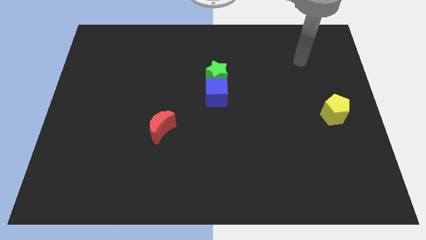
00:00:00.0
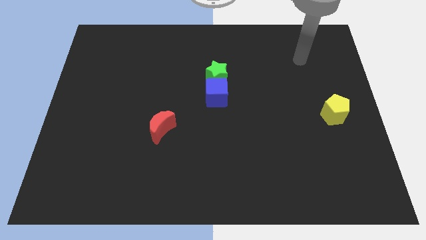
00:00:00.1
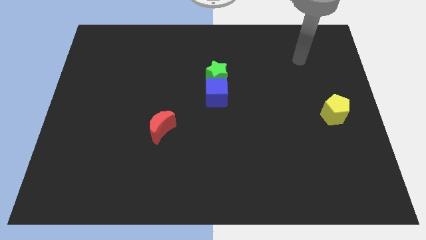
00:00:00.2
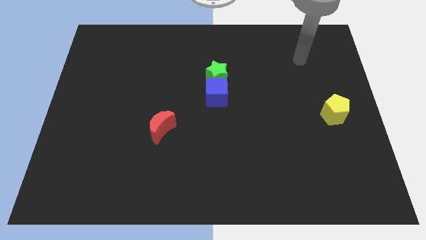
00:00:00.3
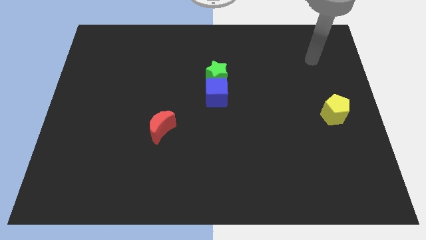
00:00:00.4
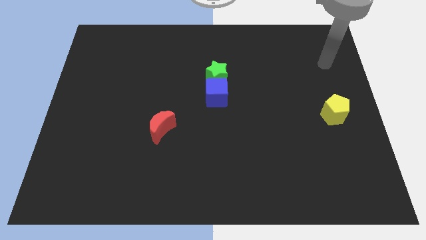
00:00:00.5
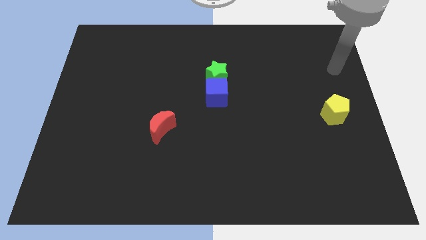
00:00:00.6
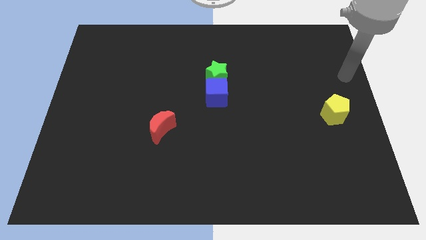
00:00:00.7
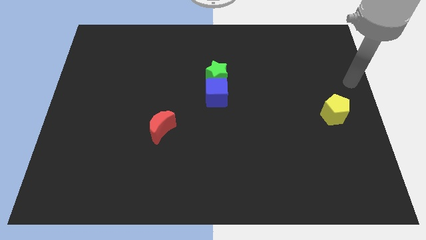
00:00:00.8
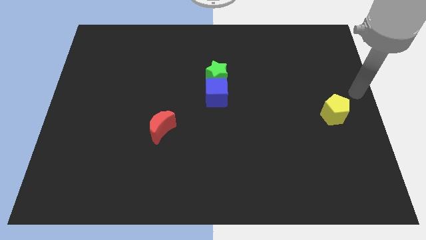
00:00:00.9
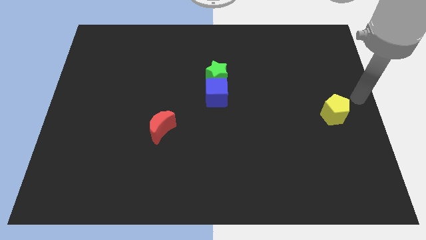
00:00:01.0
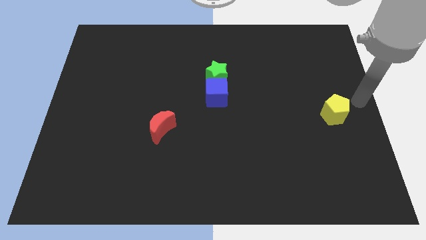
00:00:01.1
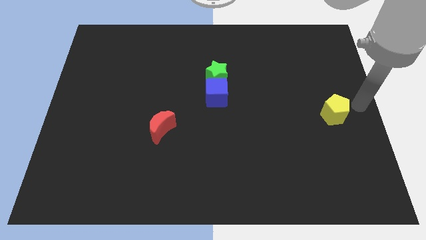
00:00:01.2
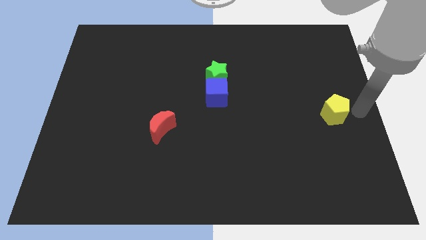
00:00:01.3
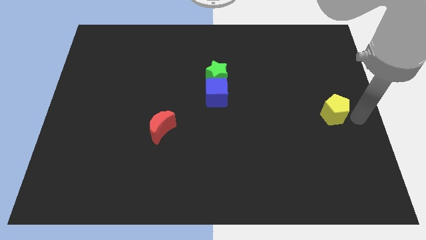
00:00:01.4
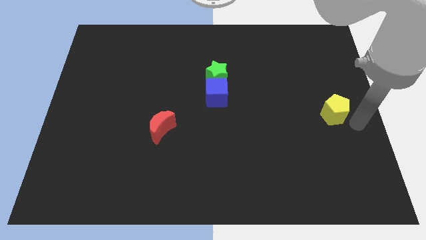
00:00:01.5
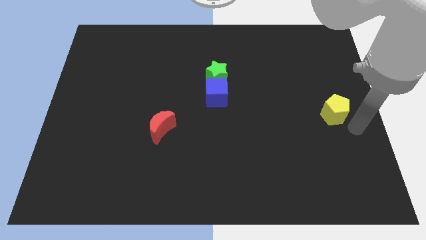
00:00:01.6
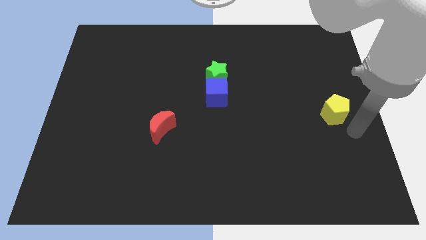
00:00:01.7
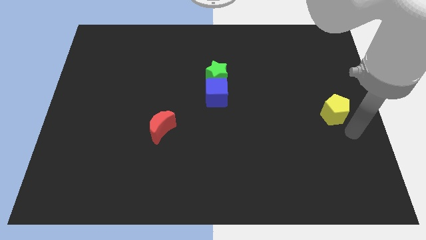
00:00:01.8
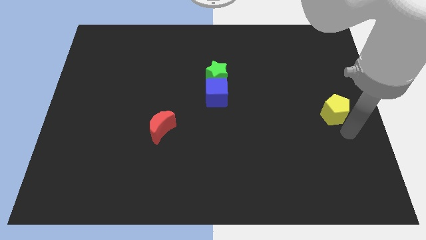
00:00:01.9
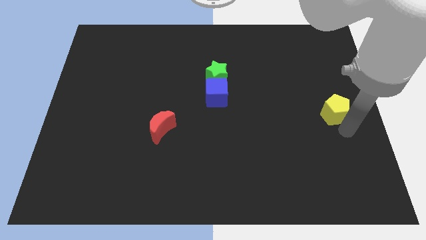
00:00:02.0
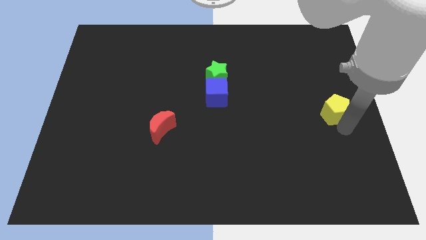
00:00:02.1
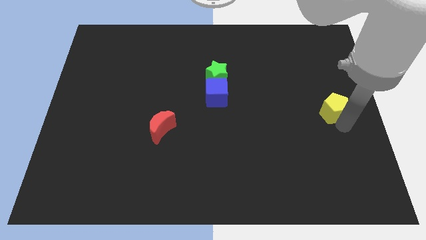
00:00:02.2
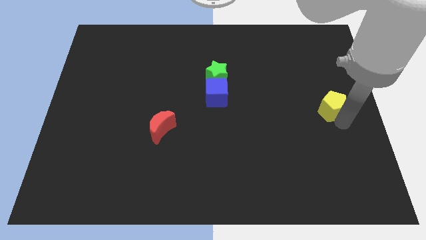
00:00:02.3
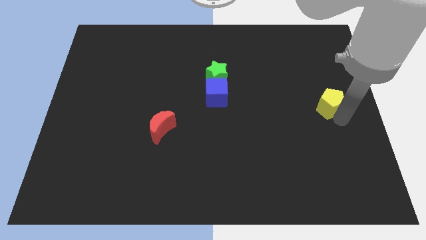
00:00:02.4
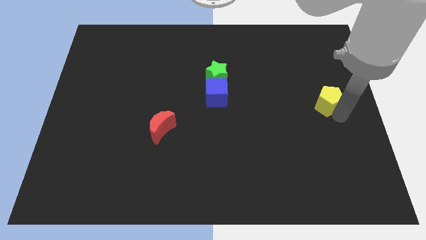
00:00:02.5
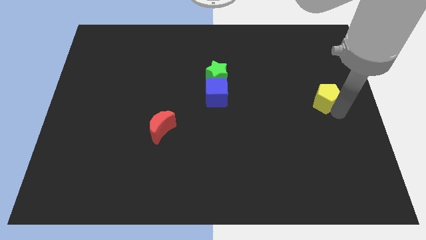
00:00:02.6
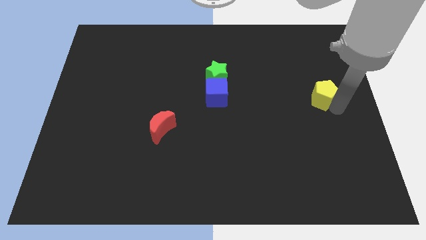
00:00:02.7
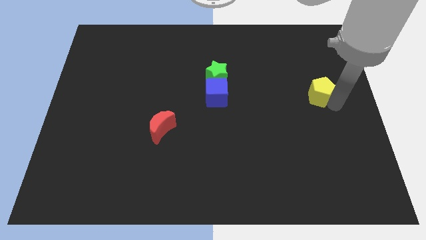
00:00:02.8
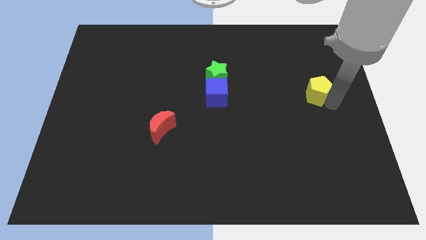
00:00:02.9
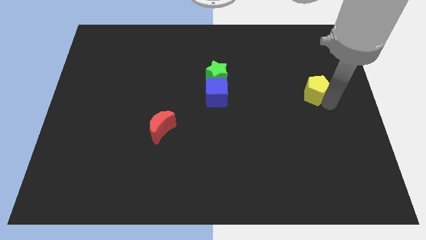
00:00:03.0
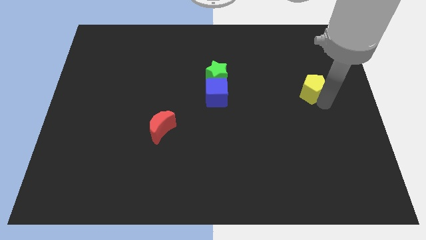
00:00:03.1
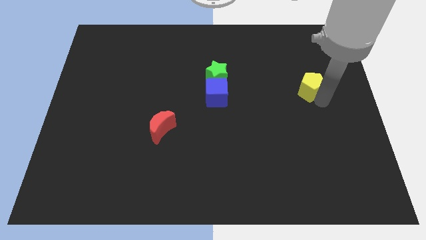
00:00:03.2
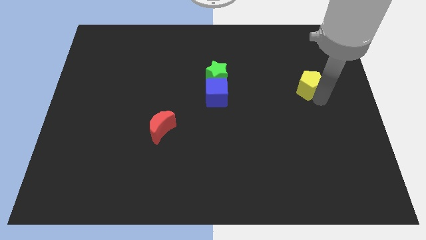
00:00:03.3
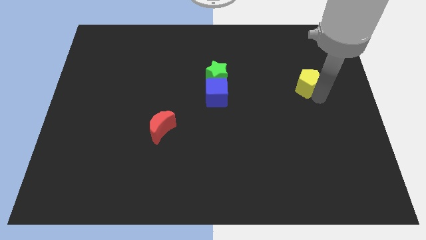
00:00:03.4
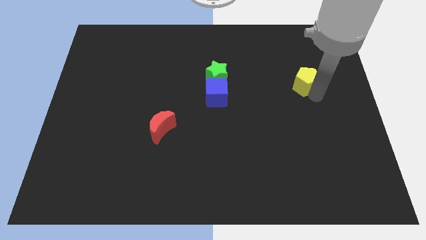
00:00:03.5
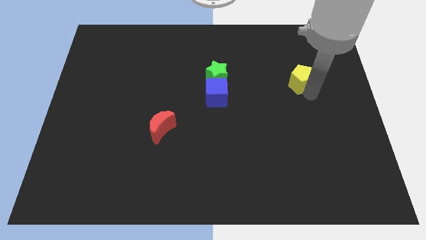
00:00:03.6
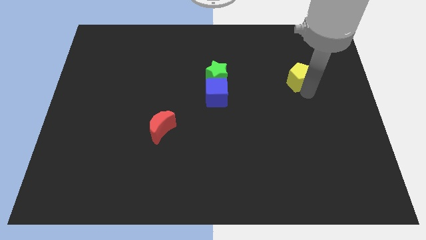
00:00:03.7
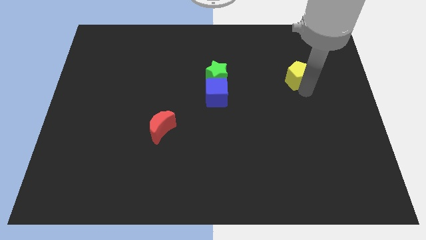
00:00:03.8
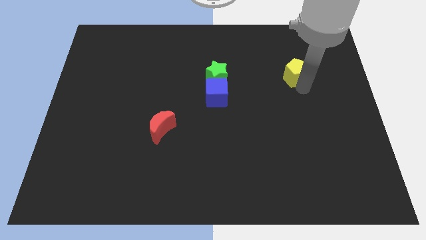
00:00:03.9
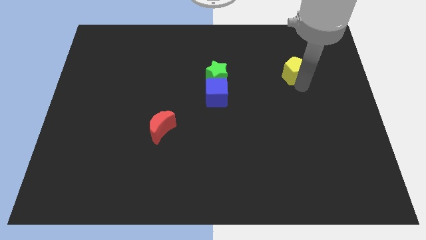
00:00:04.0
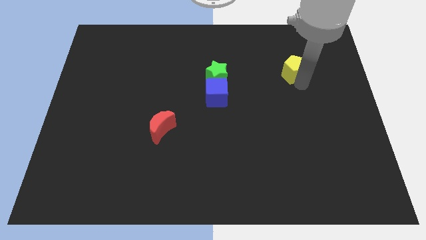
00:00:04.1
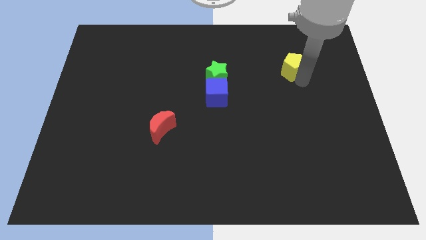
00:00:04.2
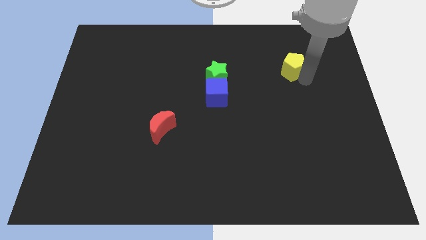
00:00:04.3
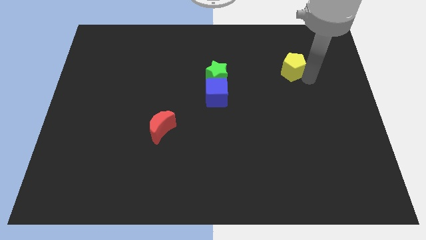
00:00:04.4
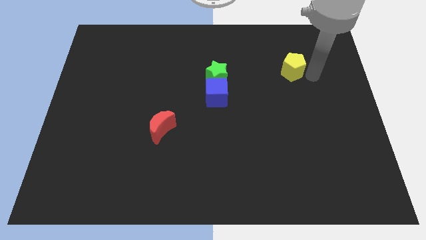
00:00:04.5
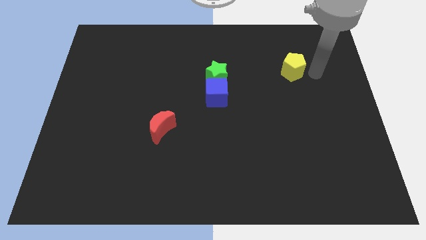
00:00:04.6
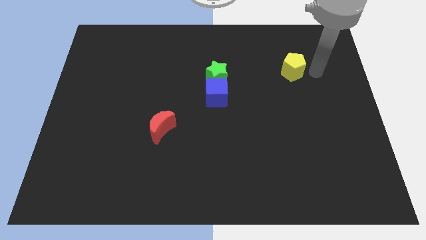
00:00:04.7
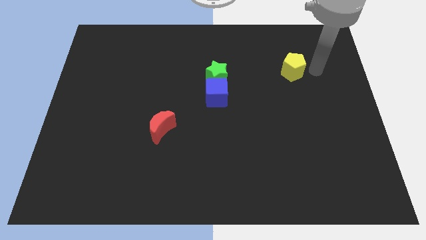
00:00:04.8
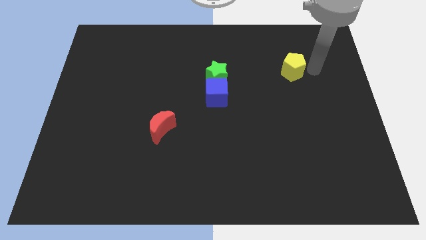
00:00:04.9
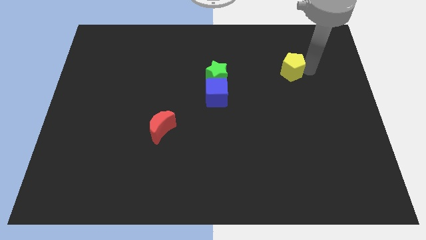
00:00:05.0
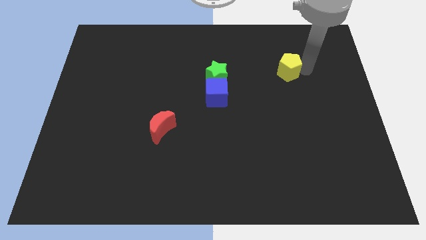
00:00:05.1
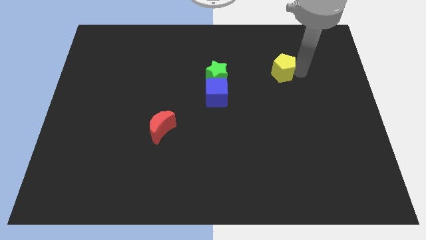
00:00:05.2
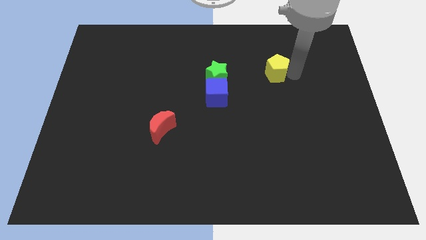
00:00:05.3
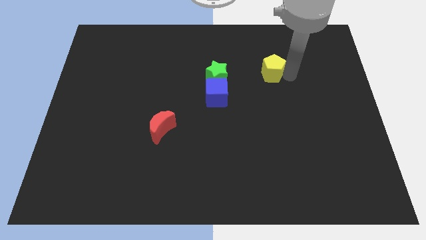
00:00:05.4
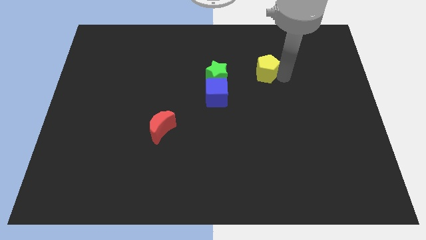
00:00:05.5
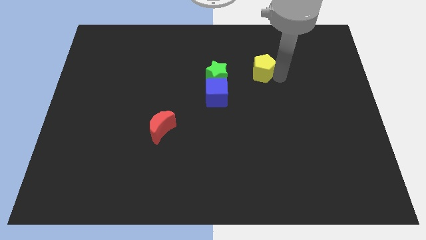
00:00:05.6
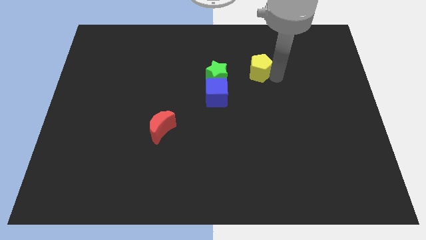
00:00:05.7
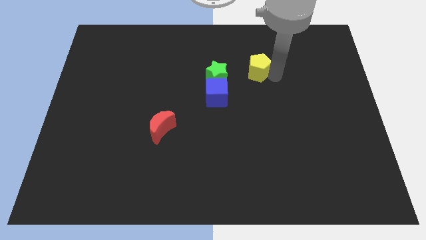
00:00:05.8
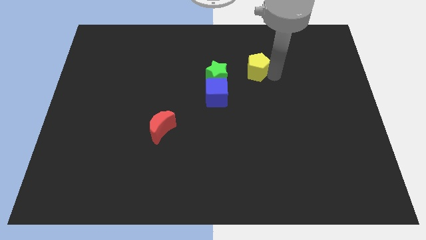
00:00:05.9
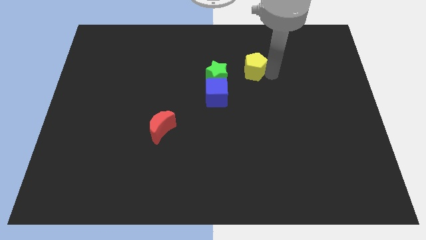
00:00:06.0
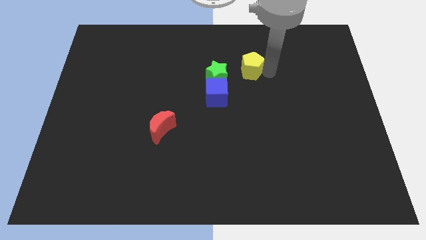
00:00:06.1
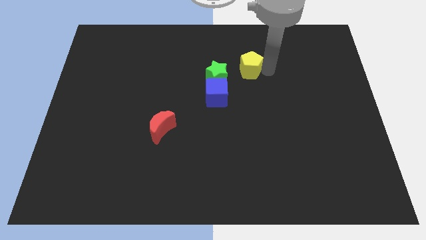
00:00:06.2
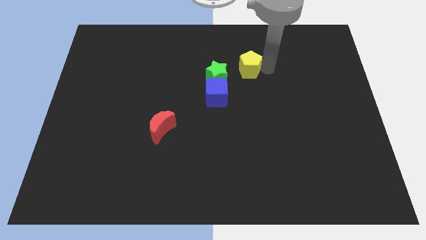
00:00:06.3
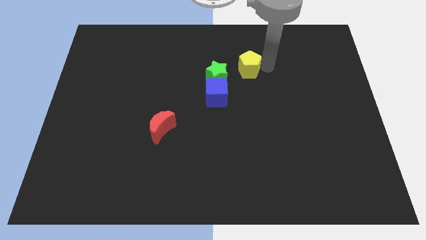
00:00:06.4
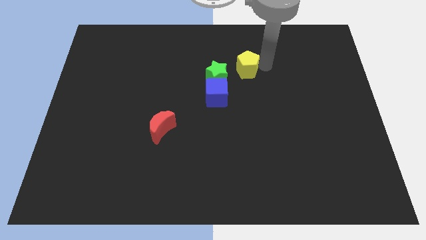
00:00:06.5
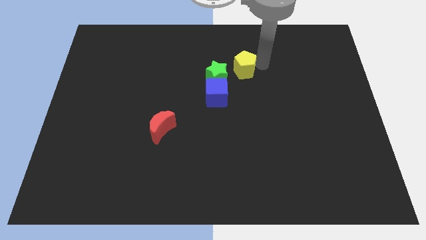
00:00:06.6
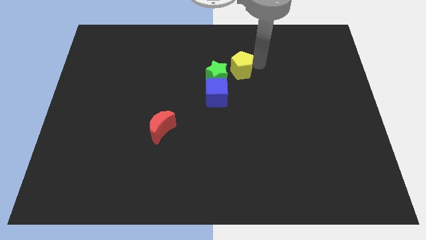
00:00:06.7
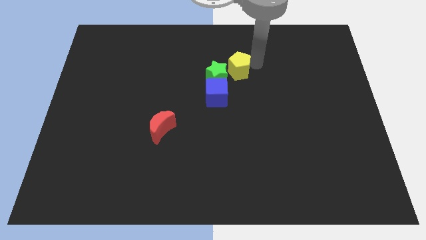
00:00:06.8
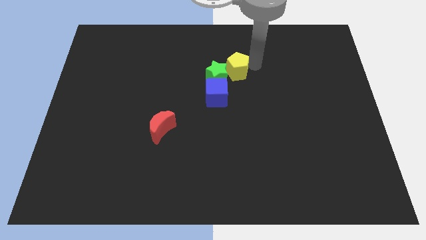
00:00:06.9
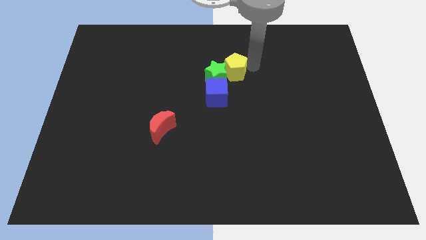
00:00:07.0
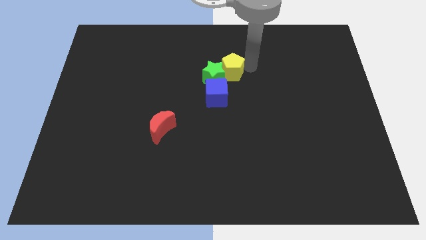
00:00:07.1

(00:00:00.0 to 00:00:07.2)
push the yellow block to the green star

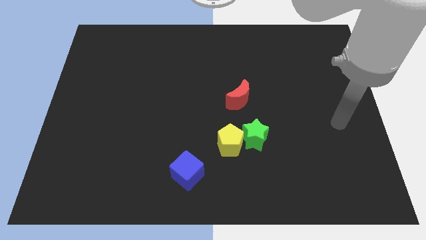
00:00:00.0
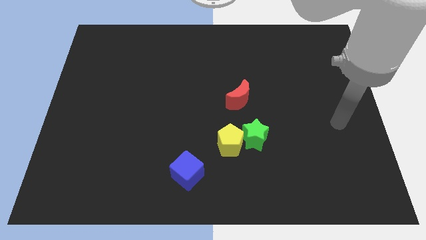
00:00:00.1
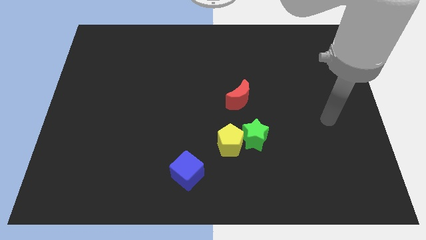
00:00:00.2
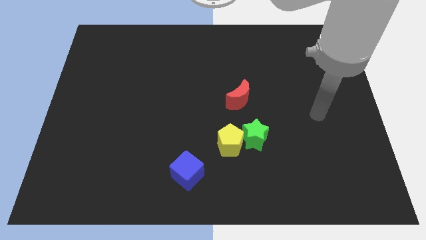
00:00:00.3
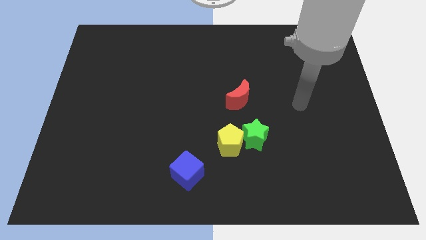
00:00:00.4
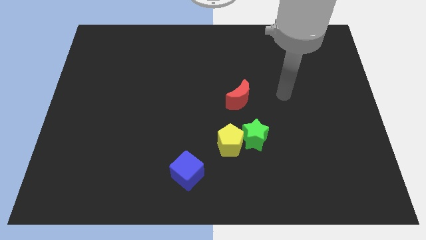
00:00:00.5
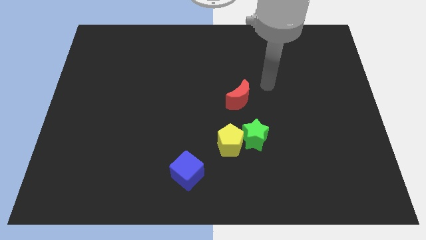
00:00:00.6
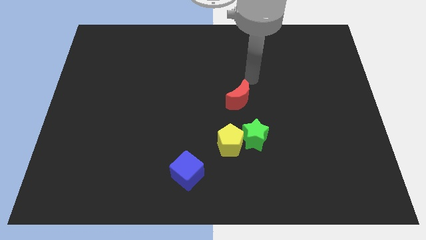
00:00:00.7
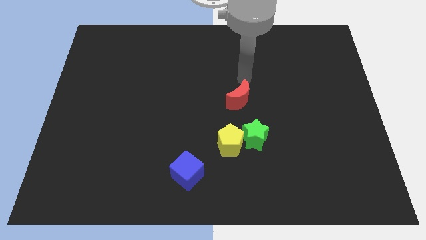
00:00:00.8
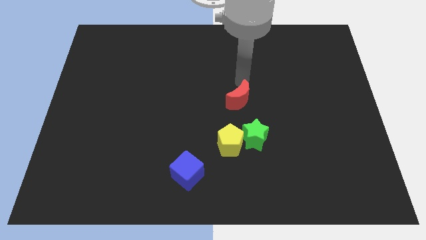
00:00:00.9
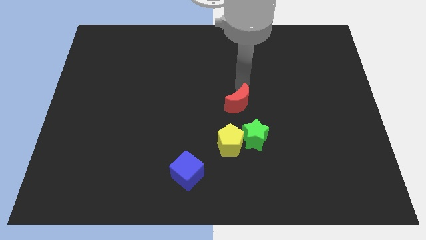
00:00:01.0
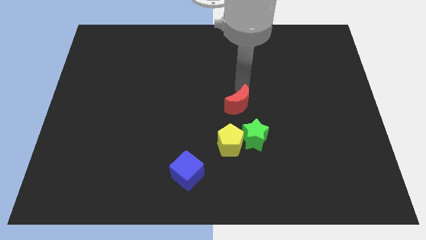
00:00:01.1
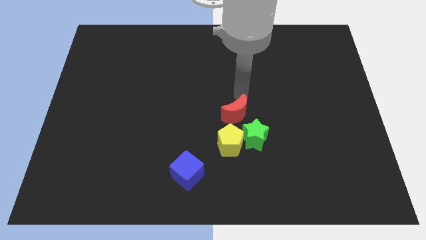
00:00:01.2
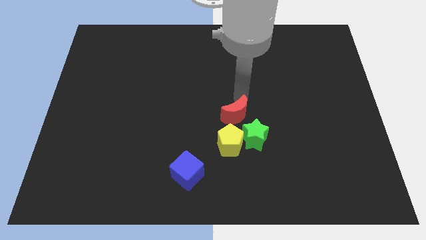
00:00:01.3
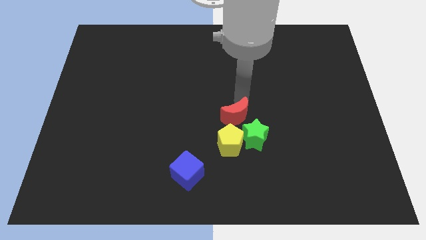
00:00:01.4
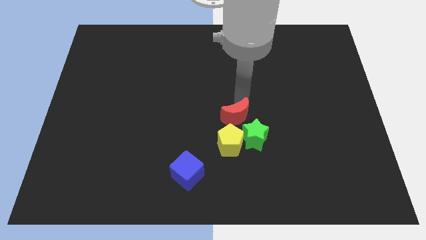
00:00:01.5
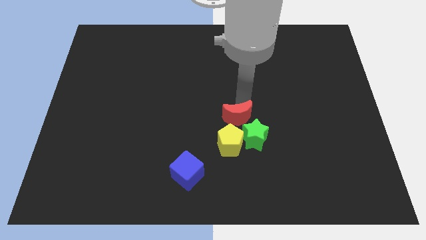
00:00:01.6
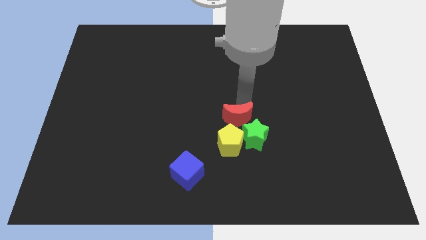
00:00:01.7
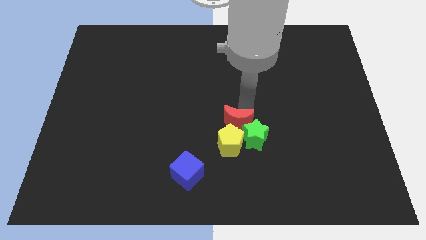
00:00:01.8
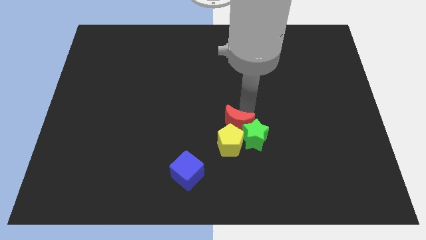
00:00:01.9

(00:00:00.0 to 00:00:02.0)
slide the red moon towards the green star
